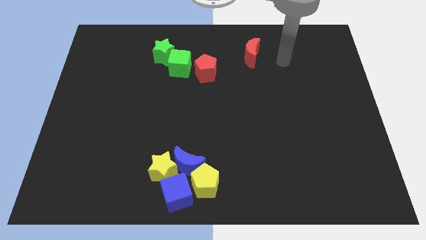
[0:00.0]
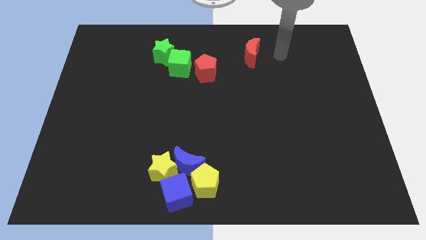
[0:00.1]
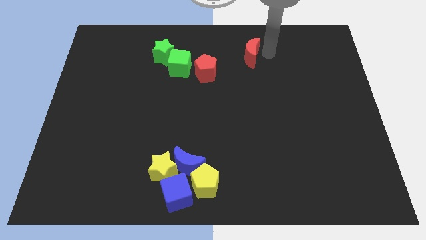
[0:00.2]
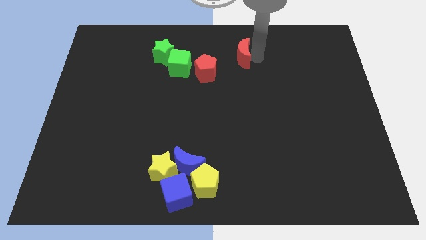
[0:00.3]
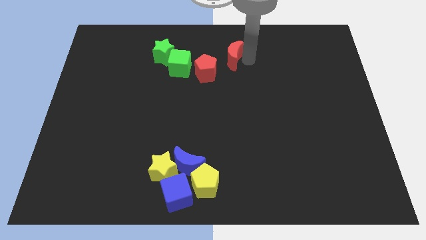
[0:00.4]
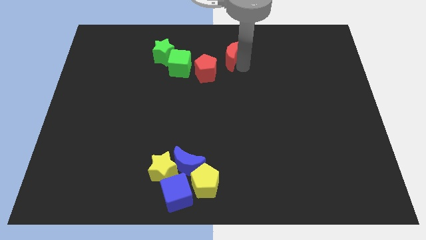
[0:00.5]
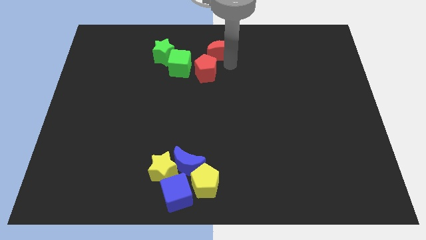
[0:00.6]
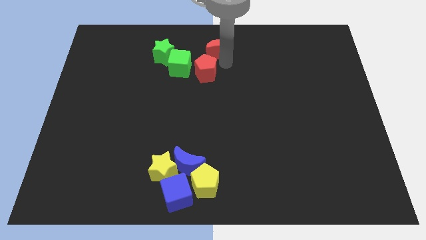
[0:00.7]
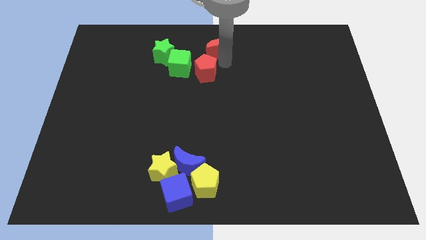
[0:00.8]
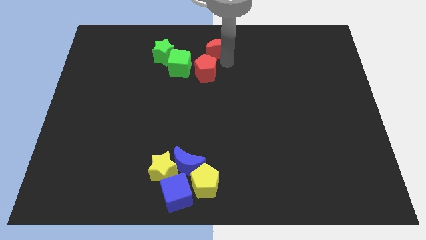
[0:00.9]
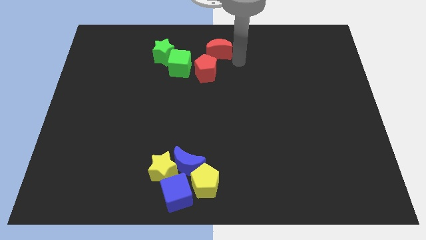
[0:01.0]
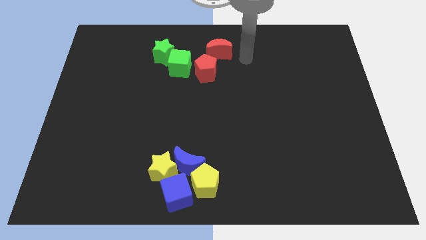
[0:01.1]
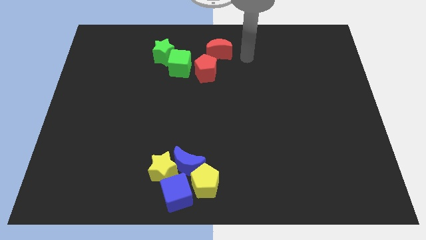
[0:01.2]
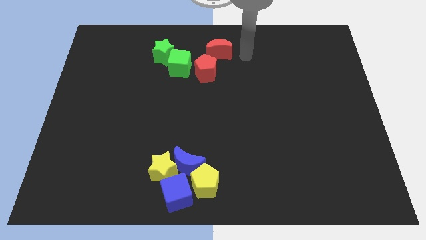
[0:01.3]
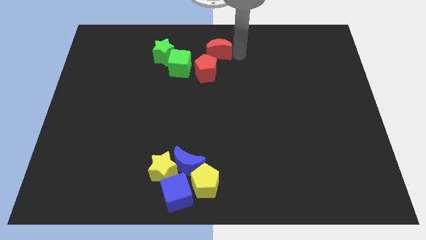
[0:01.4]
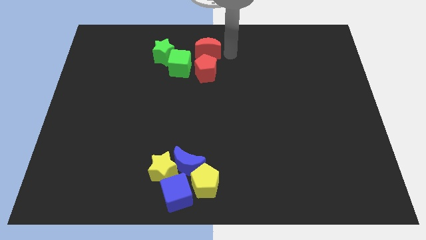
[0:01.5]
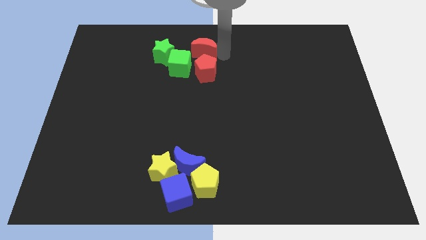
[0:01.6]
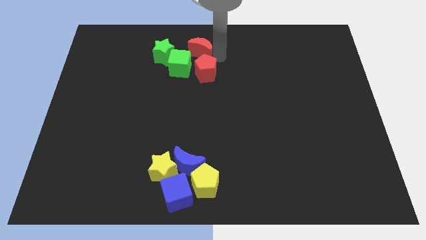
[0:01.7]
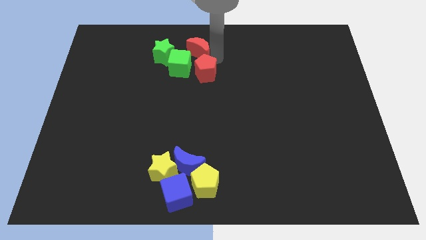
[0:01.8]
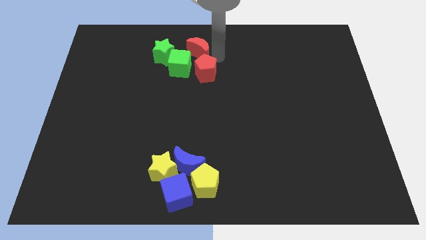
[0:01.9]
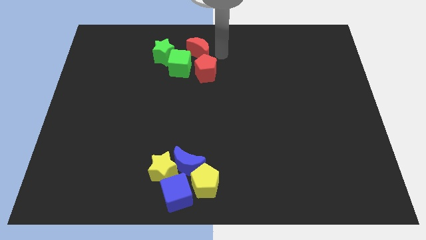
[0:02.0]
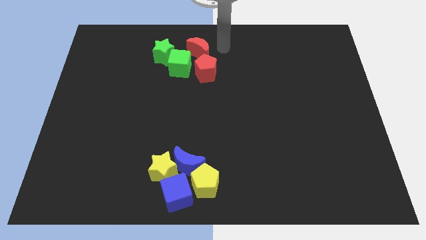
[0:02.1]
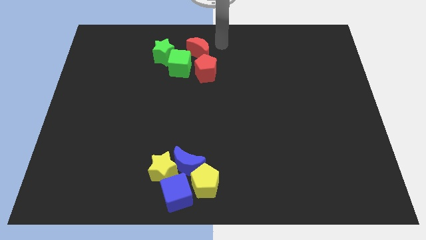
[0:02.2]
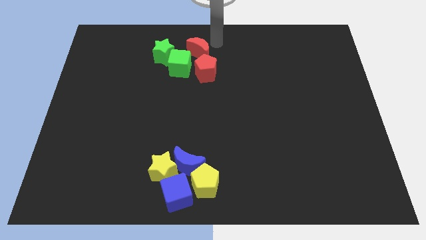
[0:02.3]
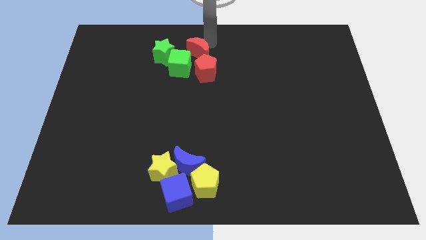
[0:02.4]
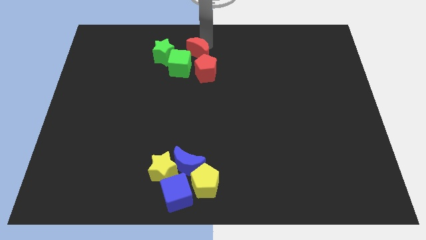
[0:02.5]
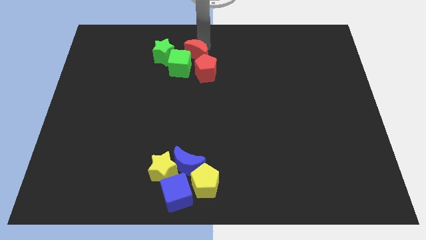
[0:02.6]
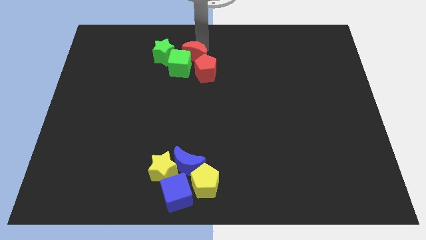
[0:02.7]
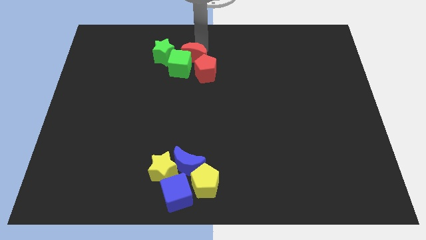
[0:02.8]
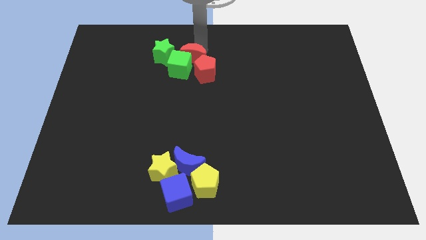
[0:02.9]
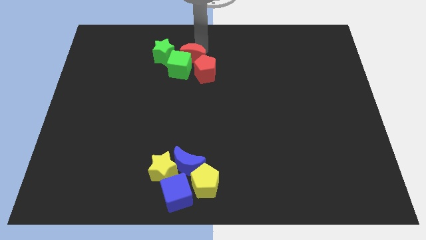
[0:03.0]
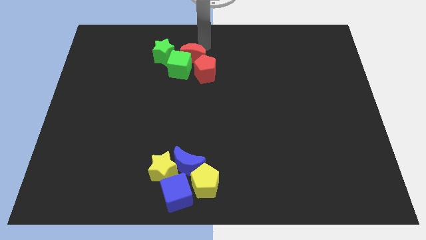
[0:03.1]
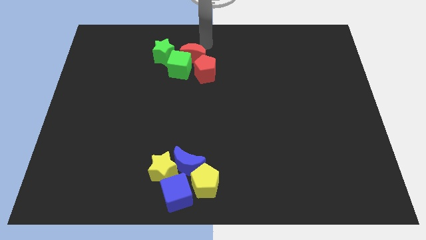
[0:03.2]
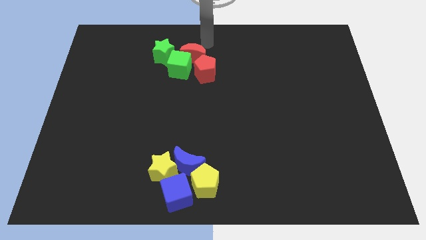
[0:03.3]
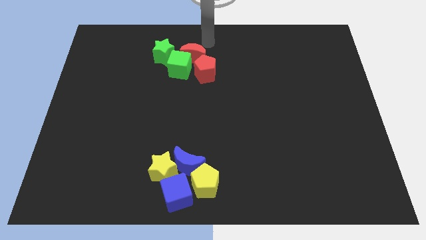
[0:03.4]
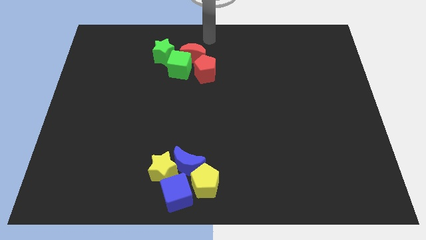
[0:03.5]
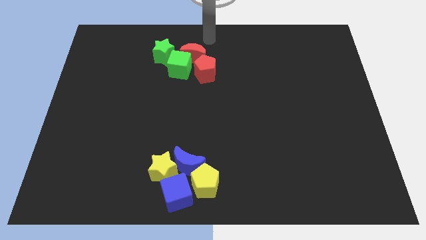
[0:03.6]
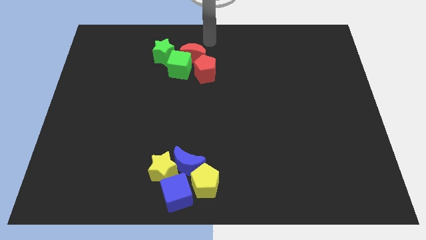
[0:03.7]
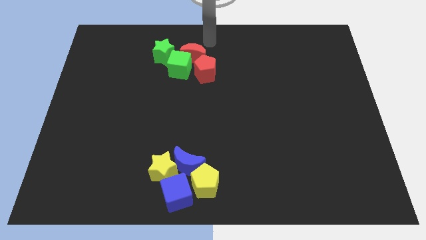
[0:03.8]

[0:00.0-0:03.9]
place the red moon above the green cube and red pentagon

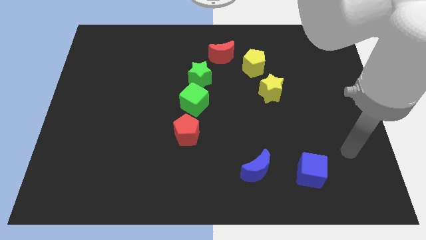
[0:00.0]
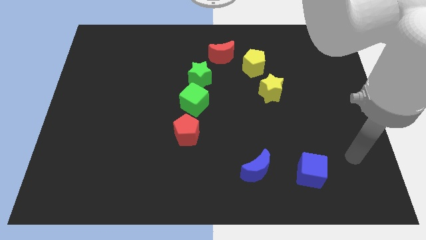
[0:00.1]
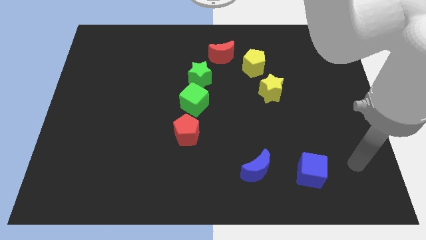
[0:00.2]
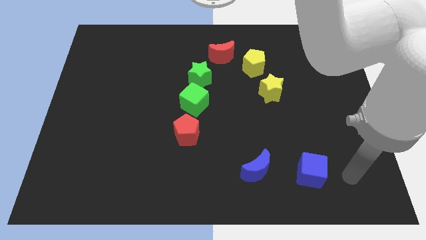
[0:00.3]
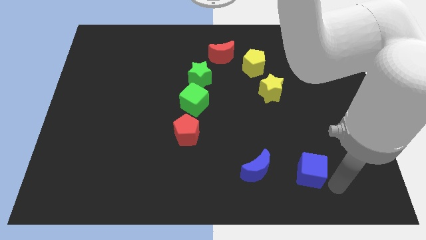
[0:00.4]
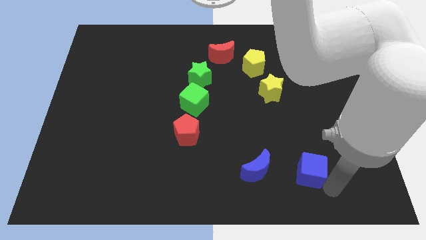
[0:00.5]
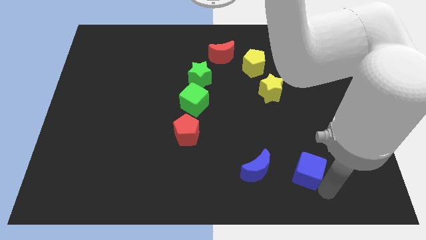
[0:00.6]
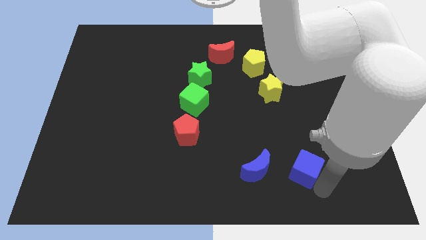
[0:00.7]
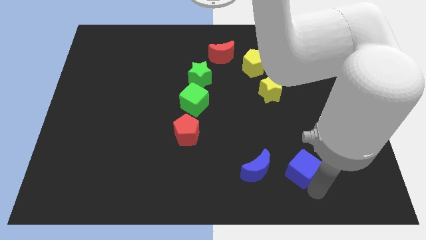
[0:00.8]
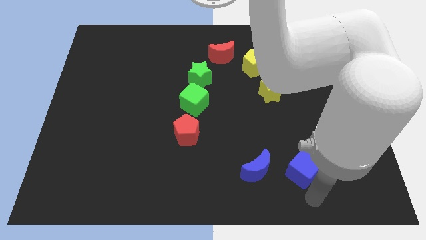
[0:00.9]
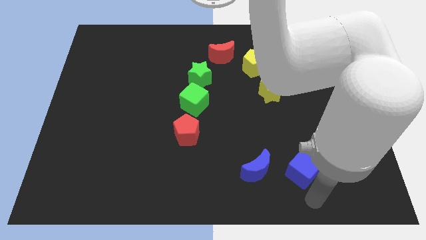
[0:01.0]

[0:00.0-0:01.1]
move the blue cube to the right side of the blue crescent

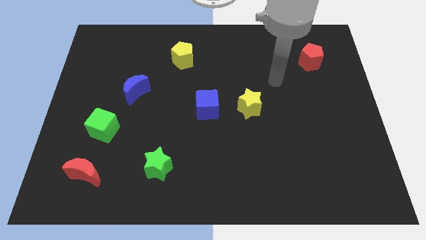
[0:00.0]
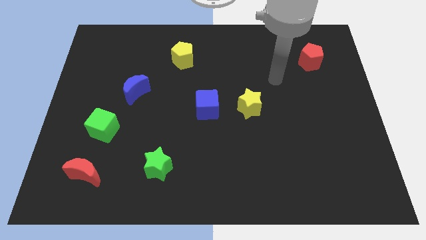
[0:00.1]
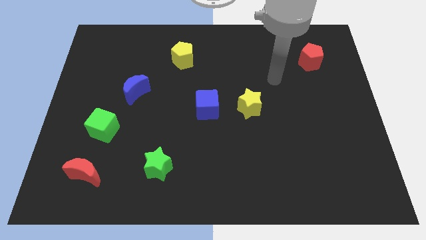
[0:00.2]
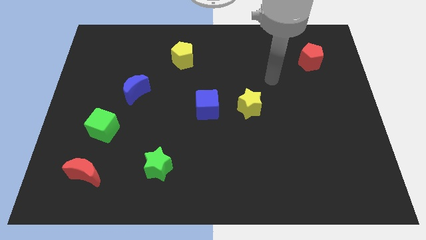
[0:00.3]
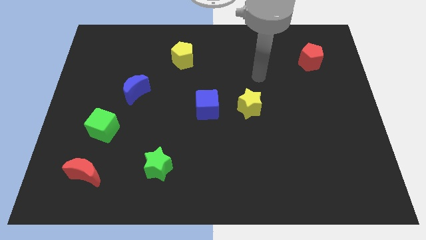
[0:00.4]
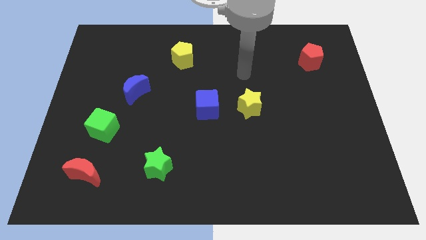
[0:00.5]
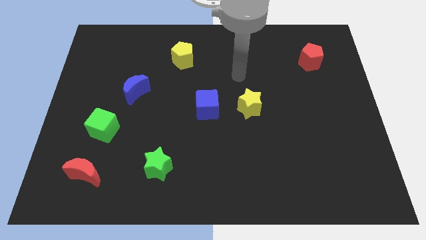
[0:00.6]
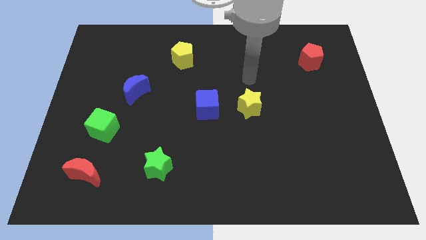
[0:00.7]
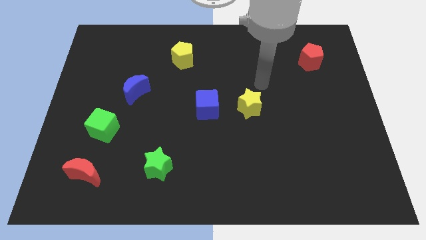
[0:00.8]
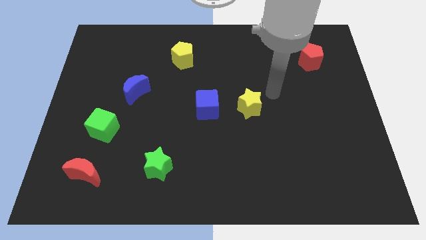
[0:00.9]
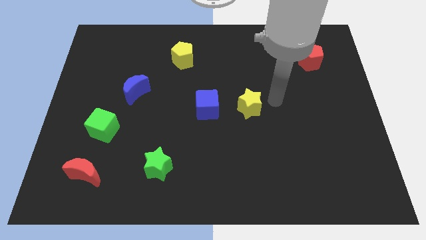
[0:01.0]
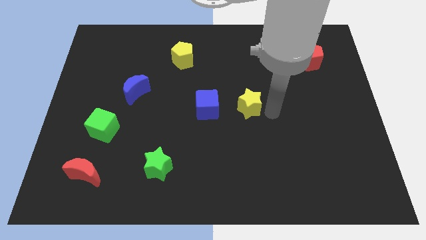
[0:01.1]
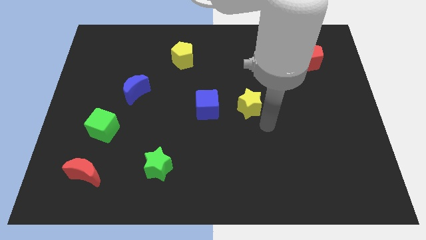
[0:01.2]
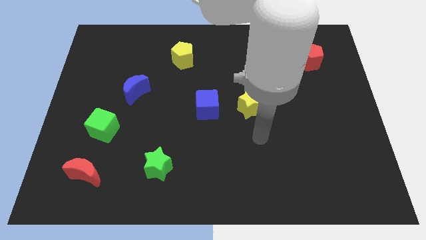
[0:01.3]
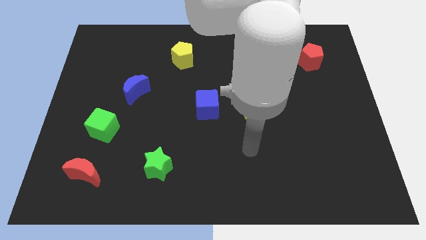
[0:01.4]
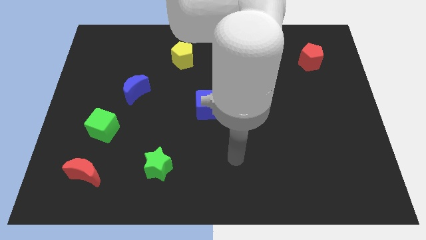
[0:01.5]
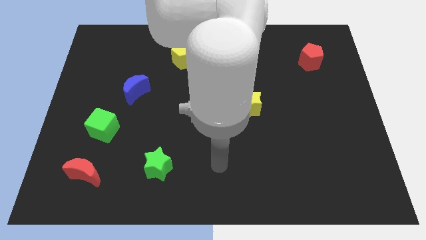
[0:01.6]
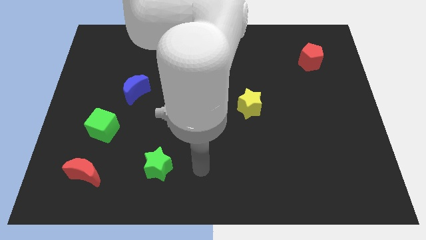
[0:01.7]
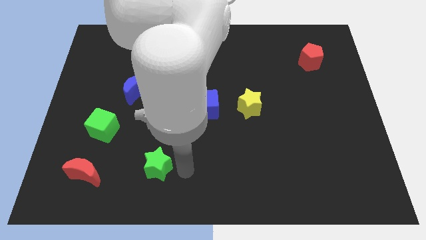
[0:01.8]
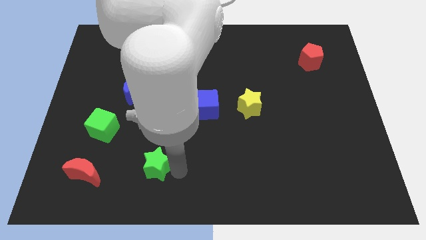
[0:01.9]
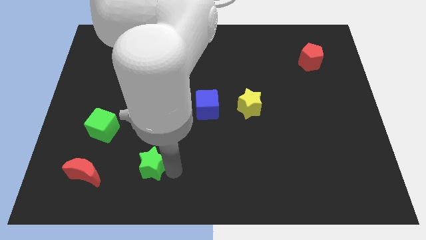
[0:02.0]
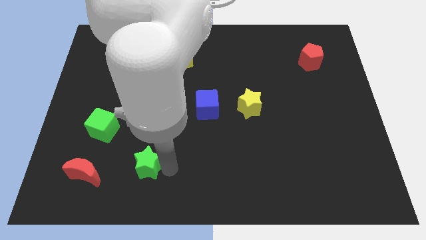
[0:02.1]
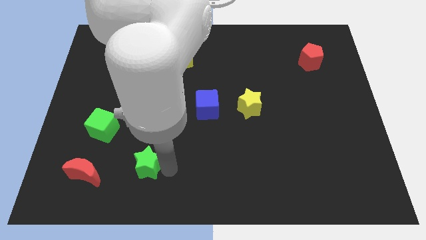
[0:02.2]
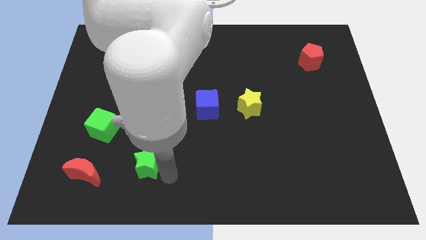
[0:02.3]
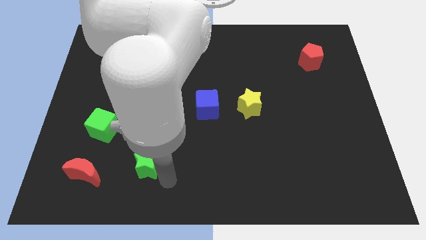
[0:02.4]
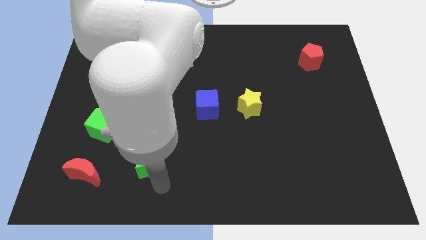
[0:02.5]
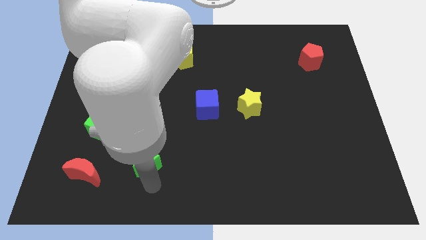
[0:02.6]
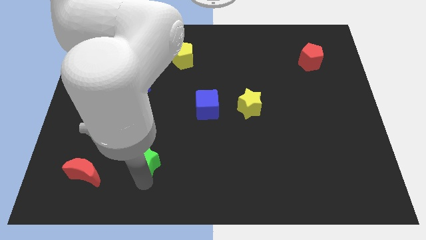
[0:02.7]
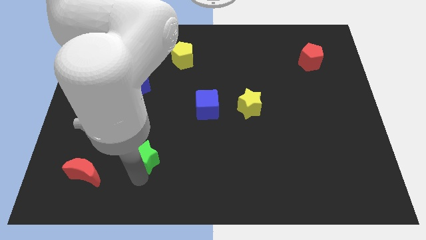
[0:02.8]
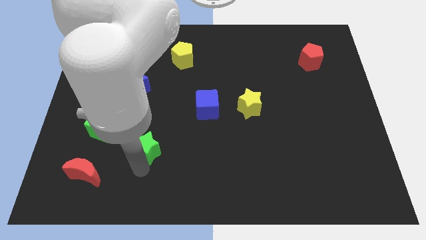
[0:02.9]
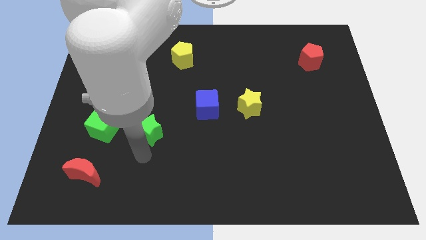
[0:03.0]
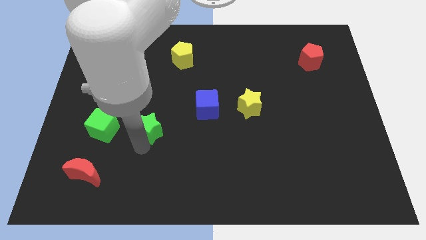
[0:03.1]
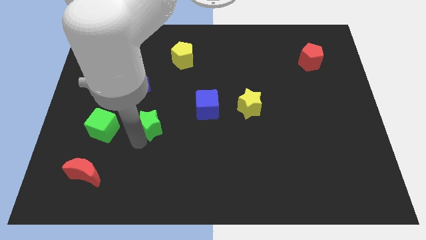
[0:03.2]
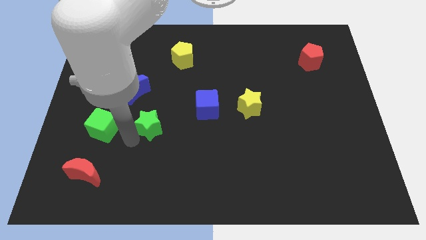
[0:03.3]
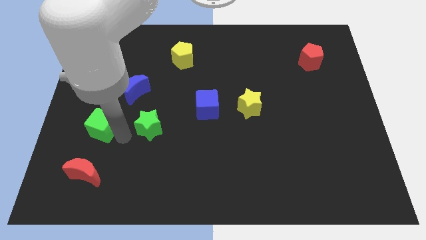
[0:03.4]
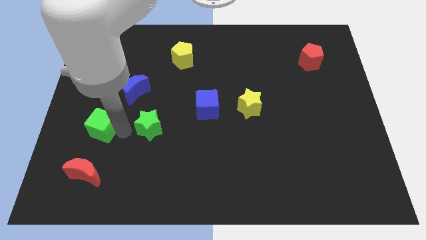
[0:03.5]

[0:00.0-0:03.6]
move the green star towards the right side of the green cube

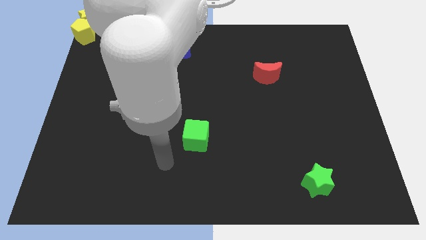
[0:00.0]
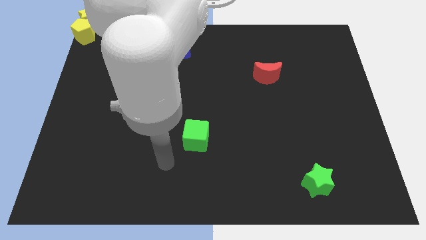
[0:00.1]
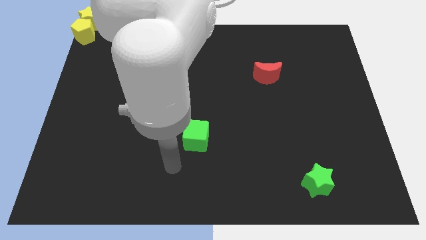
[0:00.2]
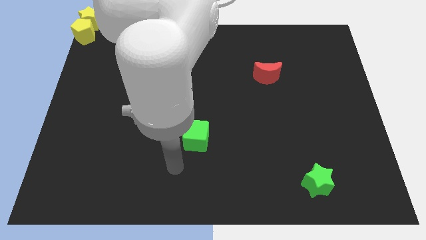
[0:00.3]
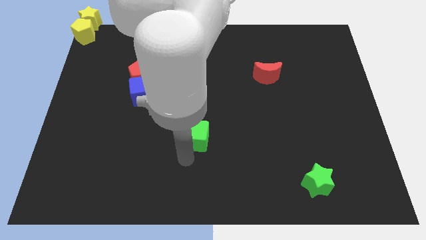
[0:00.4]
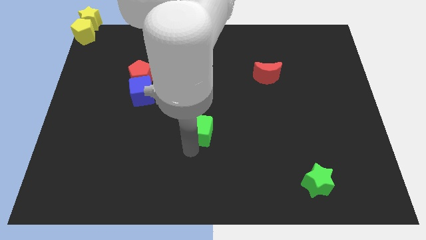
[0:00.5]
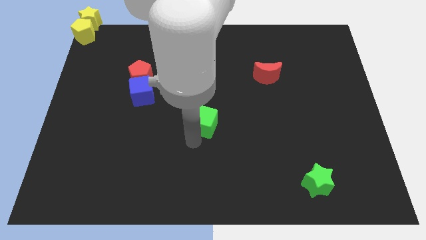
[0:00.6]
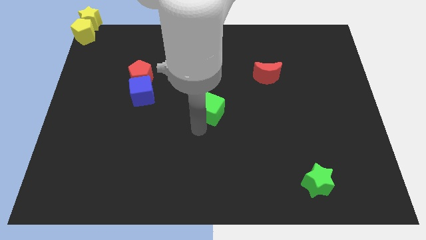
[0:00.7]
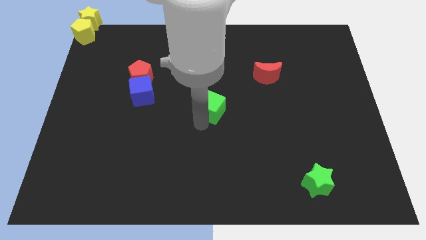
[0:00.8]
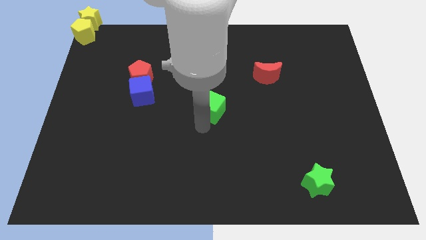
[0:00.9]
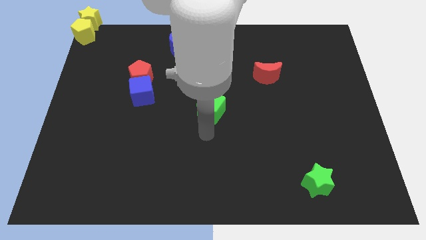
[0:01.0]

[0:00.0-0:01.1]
move the green cube to the center of the board
